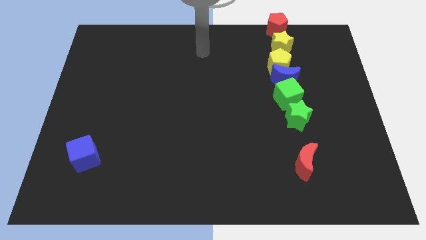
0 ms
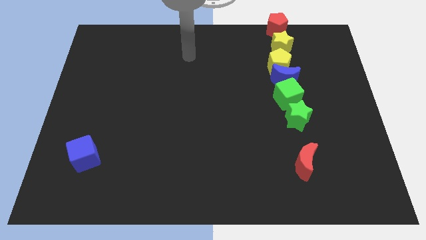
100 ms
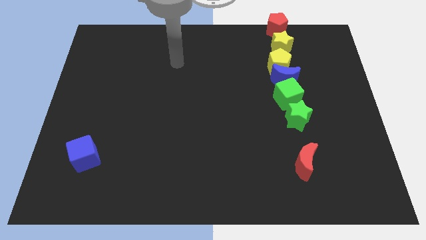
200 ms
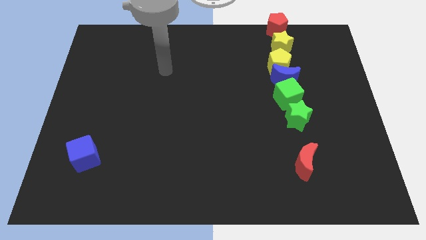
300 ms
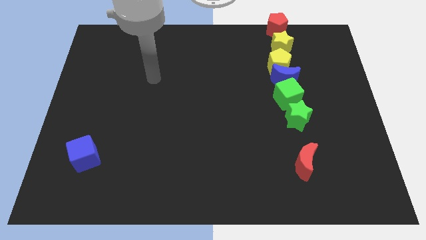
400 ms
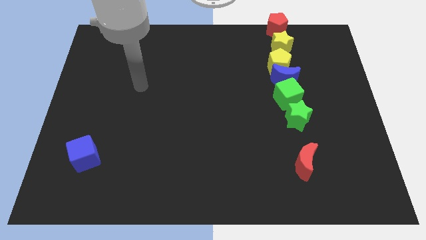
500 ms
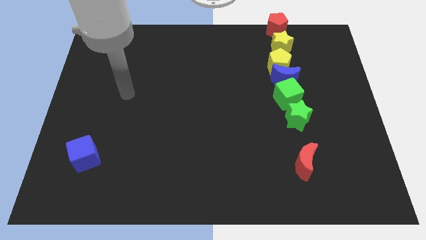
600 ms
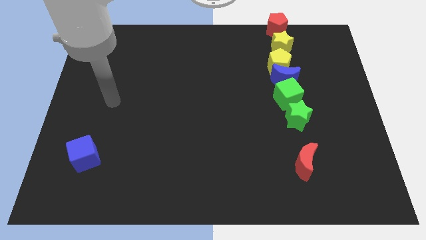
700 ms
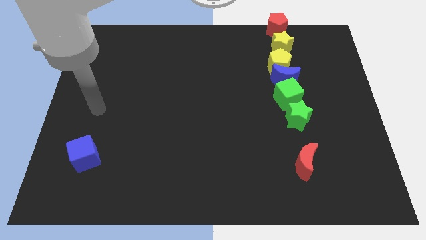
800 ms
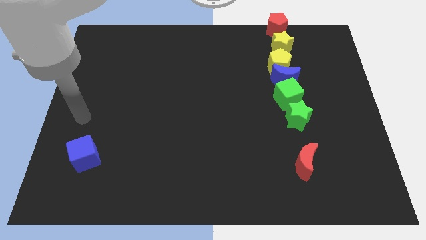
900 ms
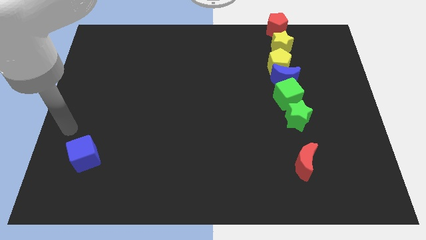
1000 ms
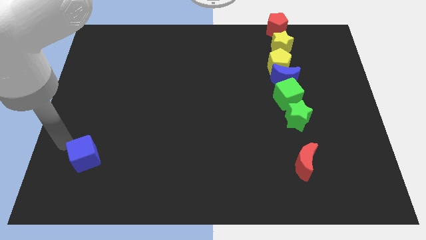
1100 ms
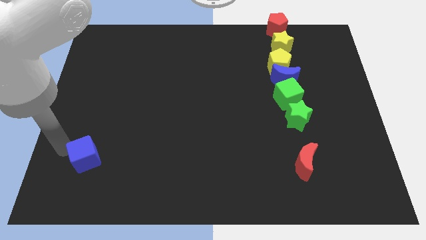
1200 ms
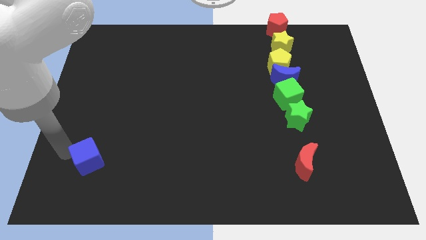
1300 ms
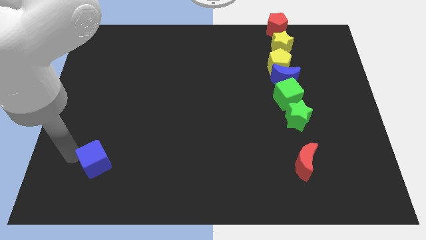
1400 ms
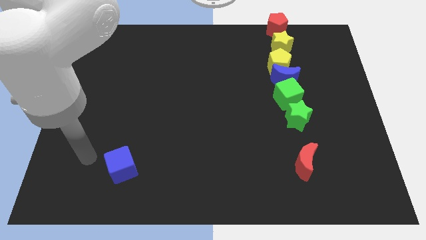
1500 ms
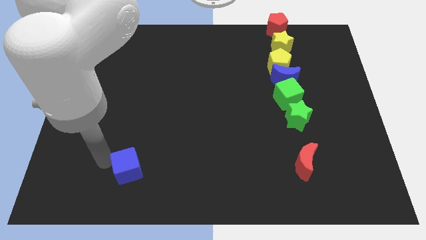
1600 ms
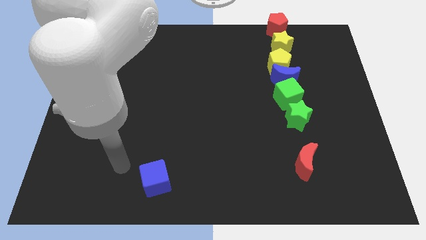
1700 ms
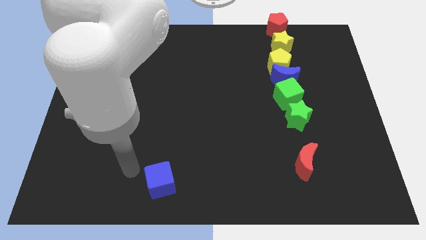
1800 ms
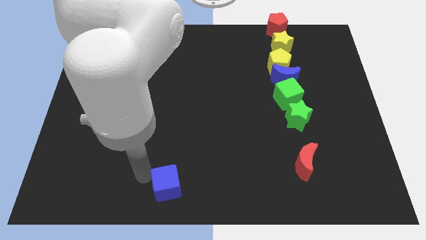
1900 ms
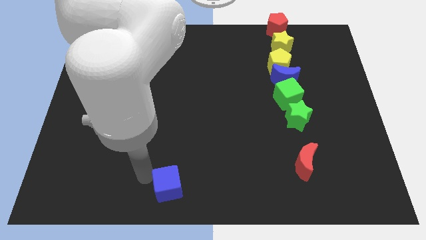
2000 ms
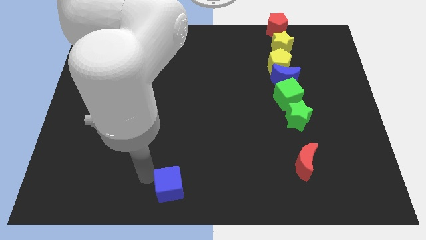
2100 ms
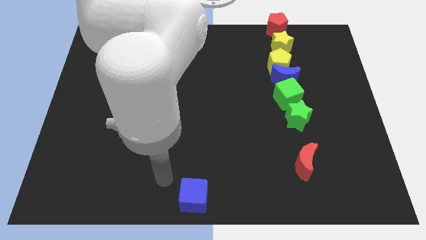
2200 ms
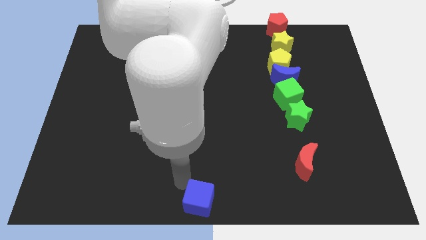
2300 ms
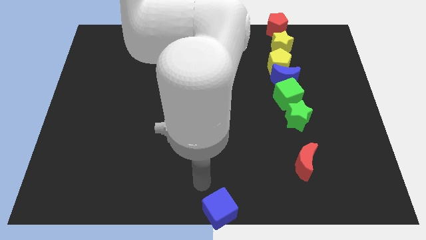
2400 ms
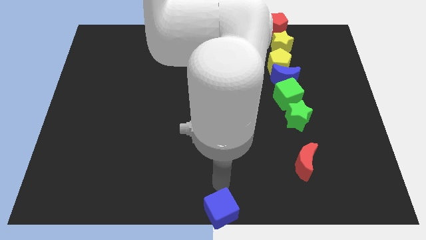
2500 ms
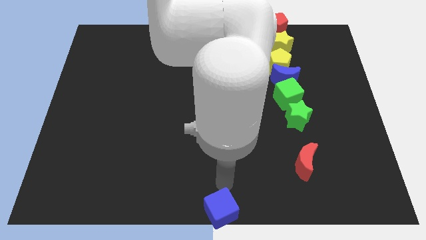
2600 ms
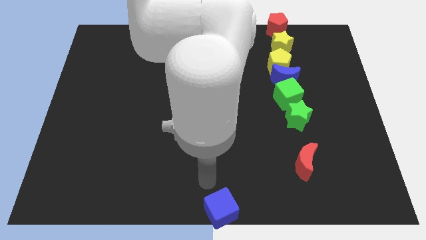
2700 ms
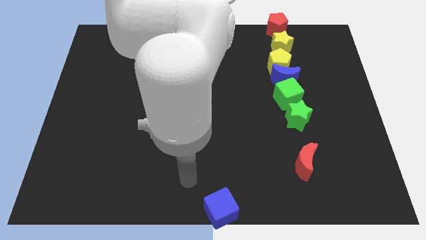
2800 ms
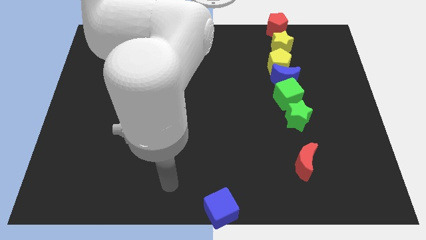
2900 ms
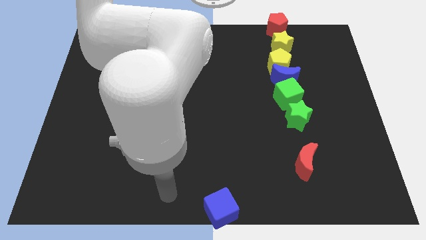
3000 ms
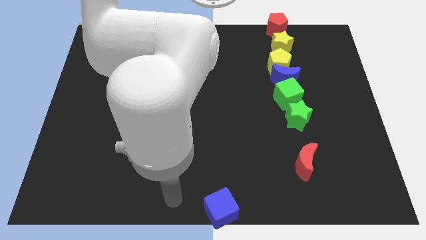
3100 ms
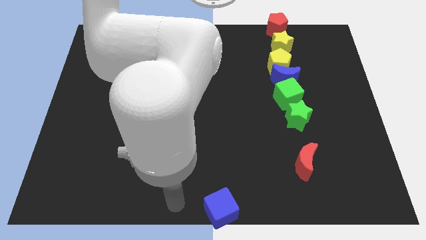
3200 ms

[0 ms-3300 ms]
place the blue cube at the bottom center of the board

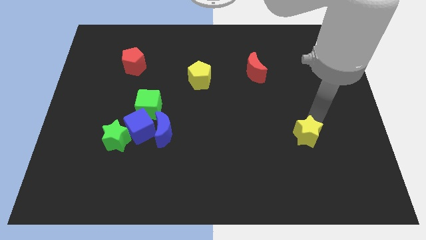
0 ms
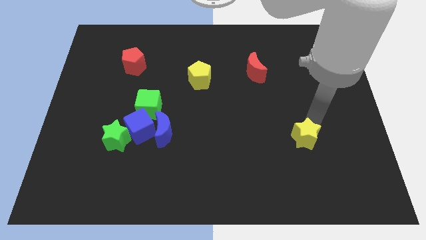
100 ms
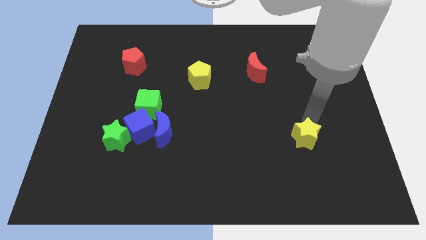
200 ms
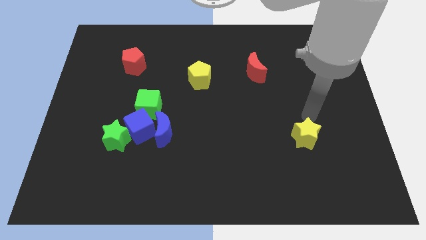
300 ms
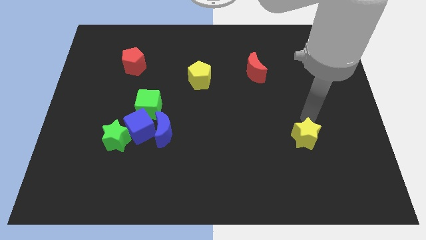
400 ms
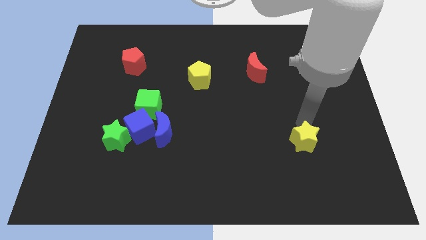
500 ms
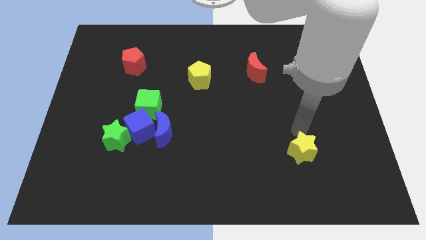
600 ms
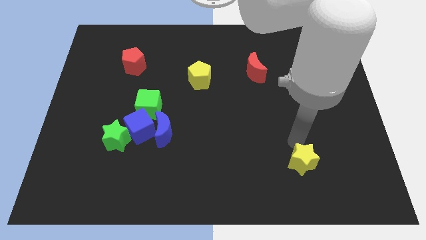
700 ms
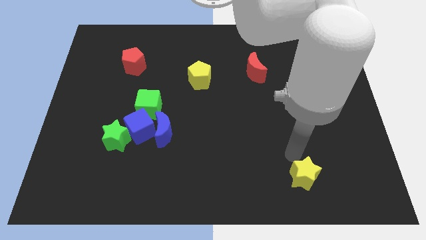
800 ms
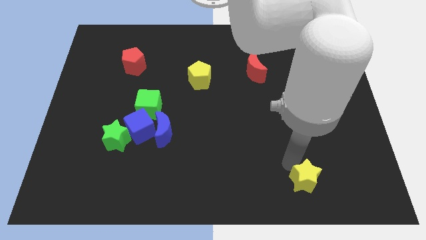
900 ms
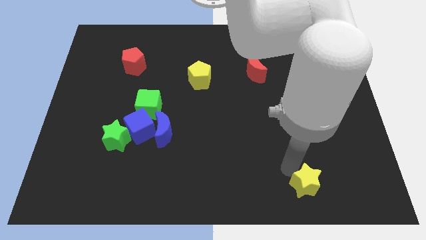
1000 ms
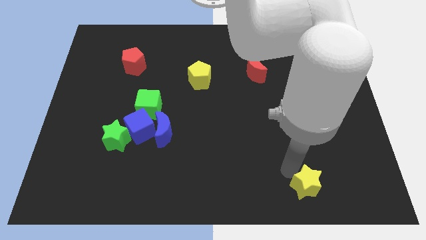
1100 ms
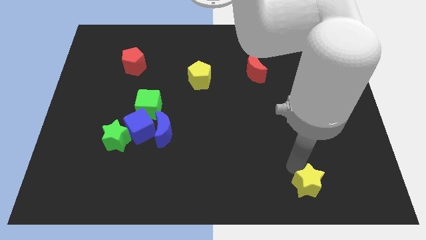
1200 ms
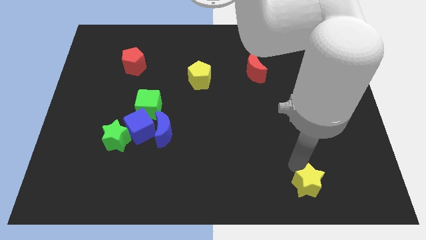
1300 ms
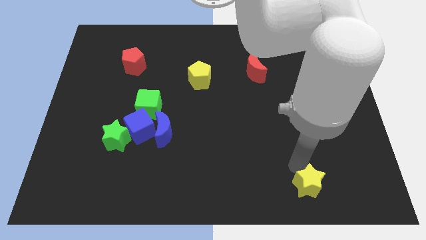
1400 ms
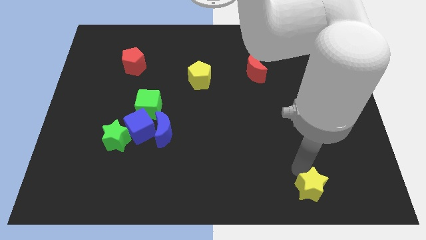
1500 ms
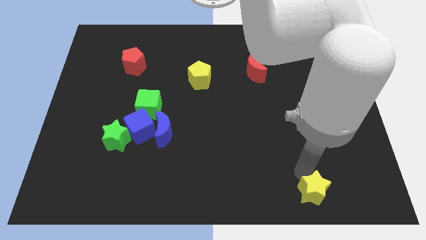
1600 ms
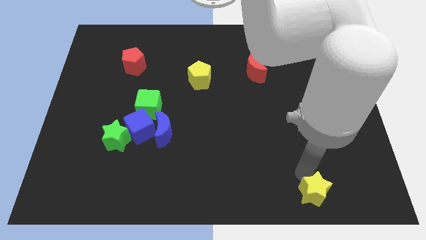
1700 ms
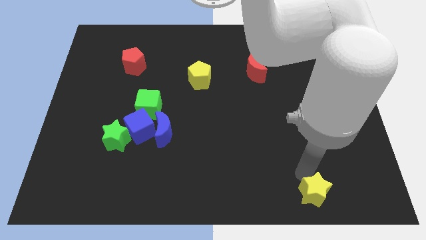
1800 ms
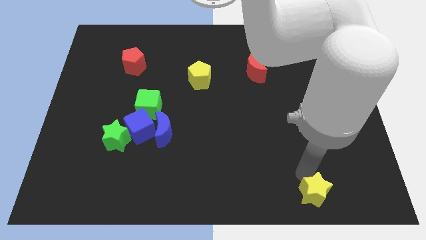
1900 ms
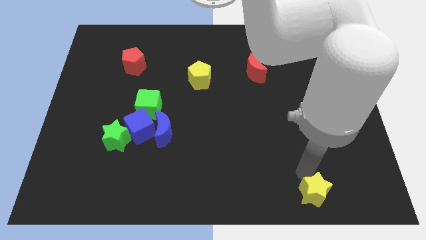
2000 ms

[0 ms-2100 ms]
push yellow star to the bottom of the board

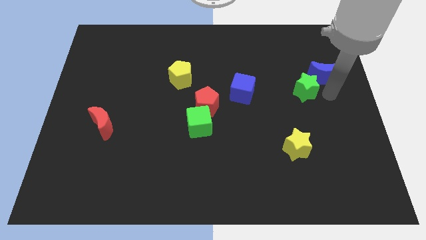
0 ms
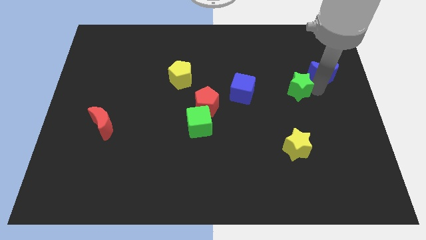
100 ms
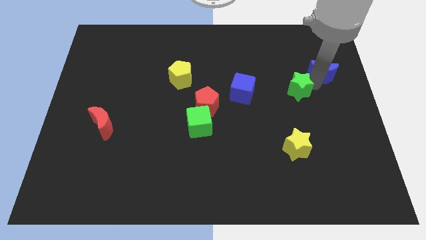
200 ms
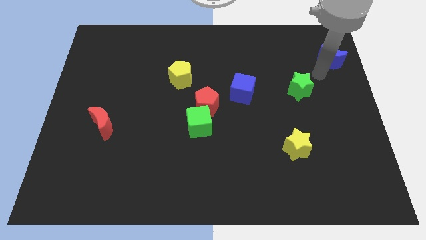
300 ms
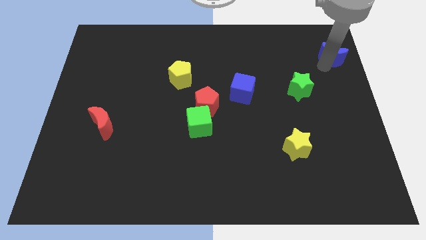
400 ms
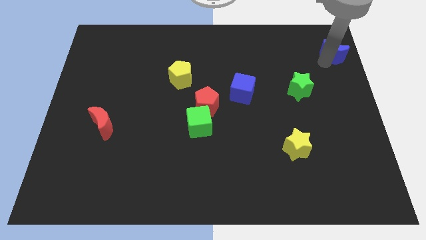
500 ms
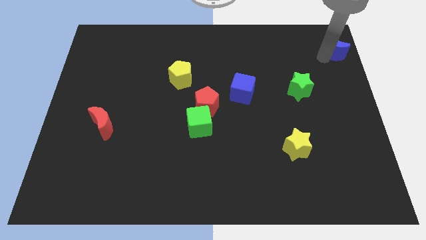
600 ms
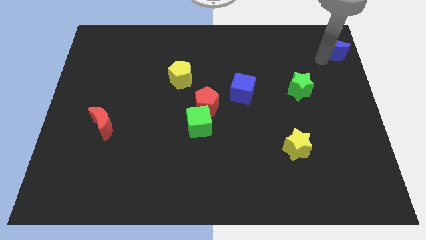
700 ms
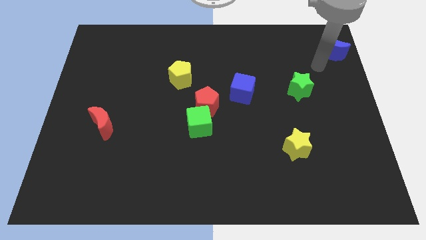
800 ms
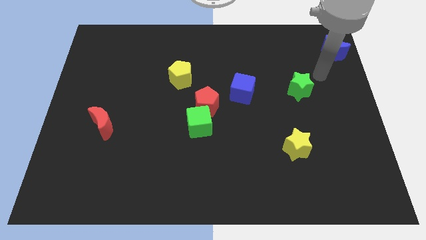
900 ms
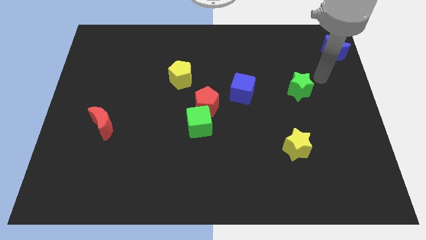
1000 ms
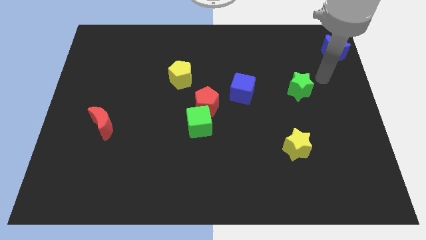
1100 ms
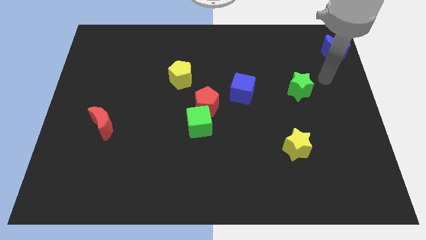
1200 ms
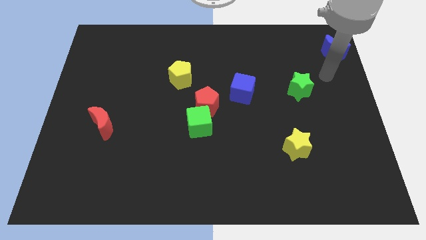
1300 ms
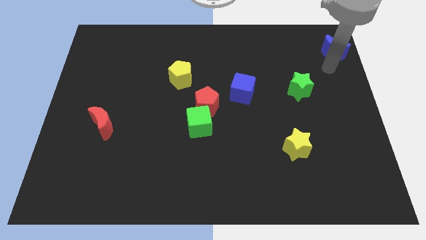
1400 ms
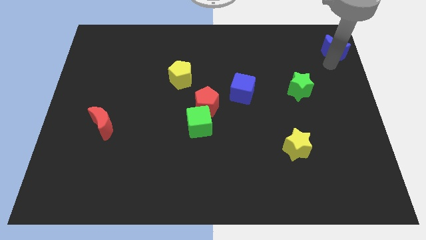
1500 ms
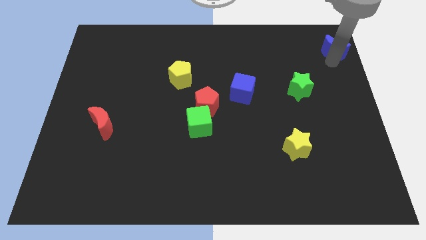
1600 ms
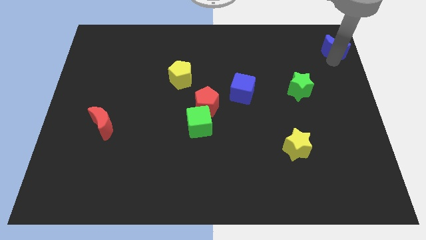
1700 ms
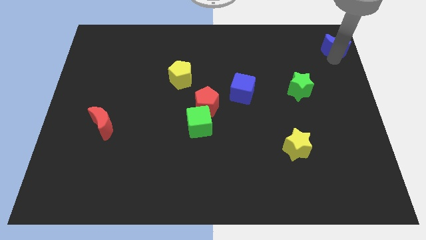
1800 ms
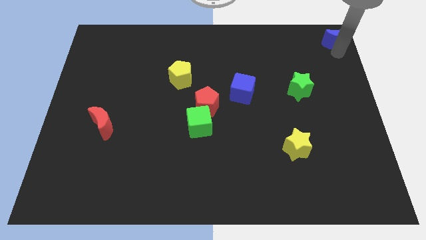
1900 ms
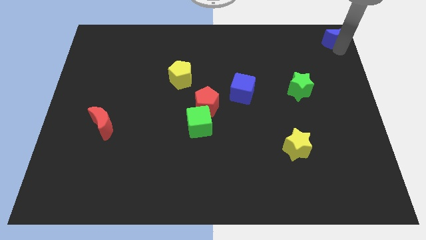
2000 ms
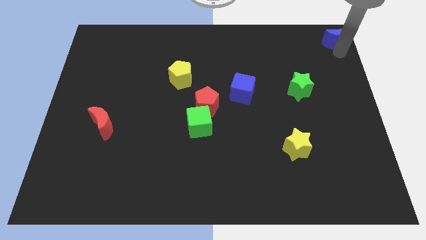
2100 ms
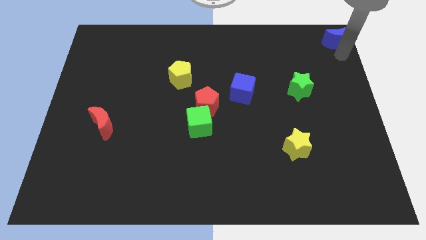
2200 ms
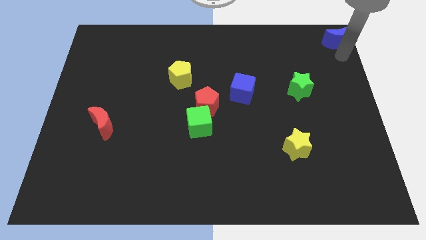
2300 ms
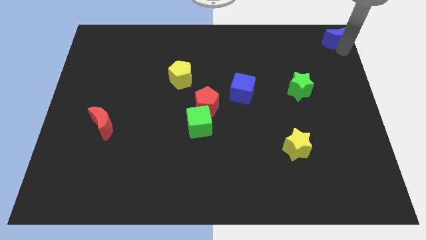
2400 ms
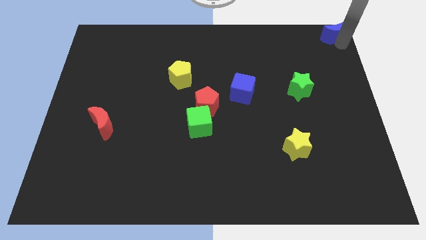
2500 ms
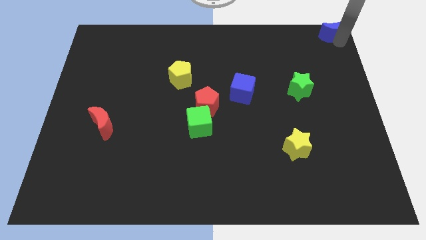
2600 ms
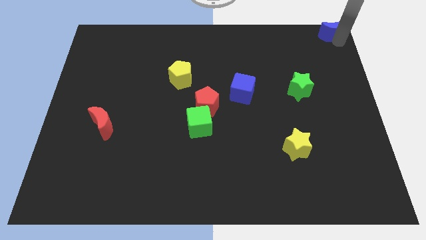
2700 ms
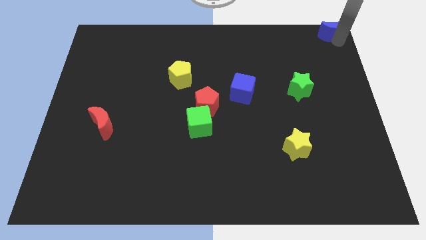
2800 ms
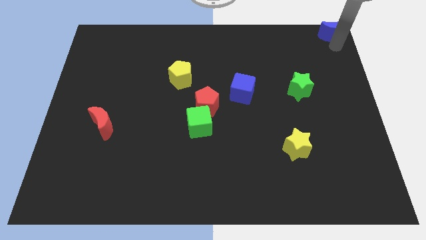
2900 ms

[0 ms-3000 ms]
place the blue moon to the top right corner of the board

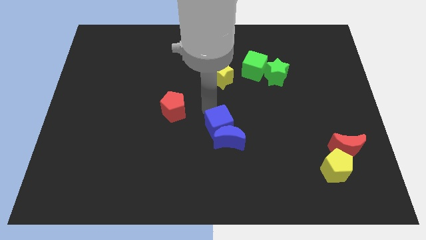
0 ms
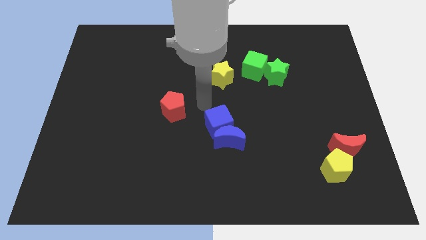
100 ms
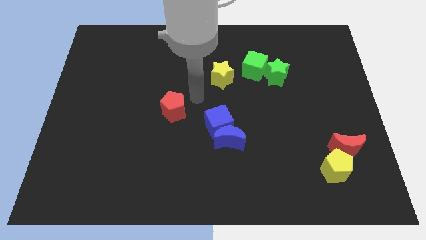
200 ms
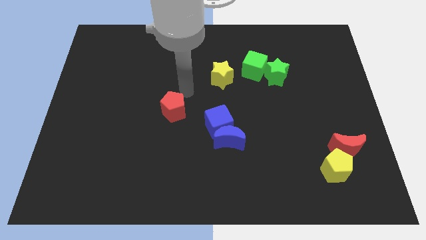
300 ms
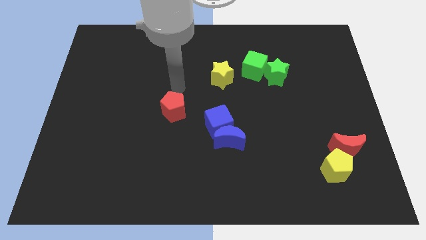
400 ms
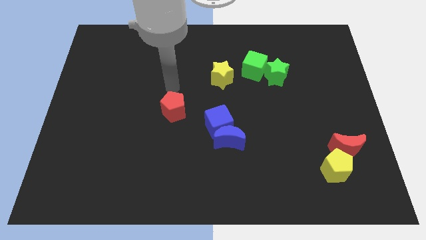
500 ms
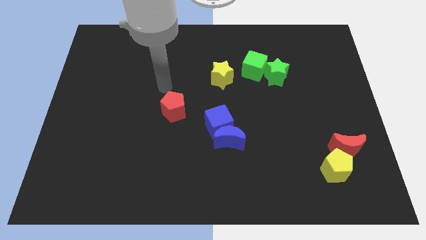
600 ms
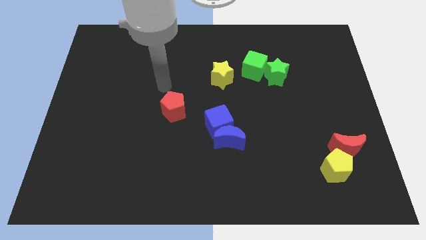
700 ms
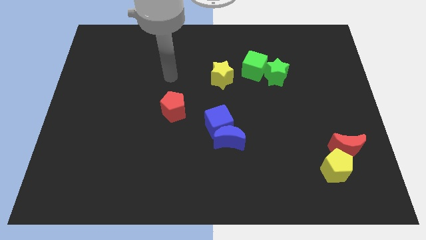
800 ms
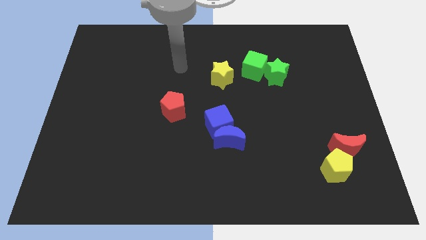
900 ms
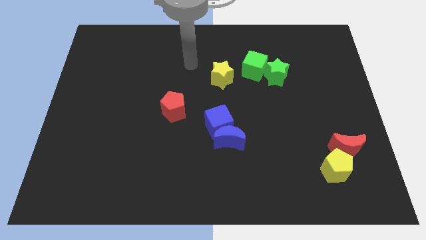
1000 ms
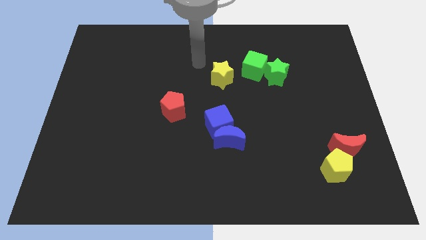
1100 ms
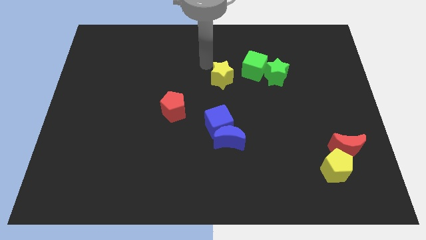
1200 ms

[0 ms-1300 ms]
move your arm away from the blue cube
